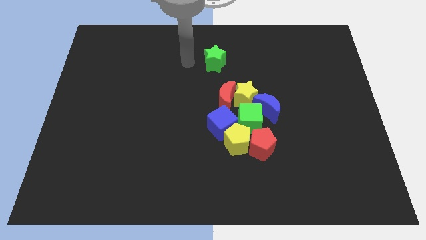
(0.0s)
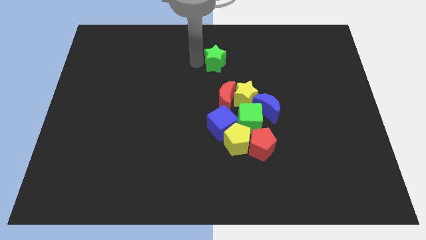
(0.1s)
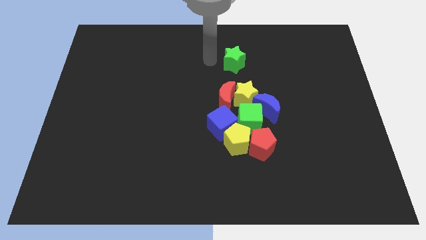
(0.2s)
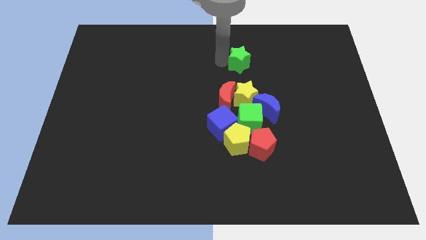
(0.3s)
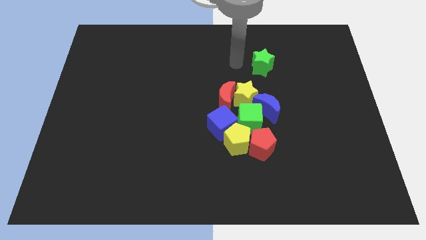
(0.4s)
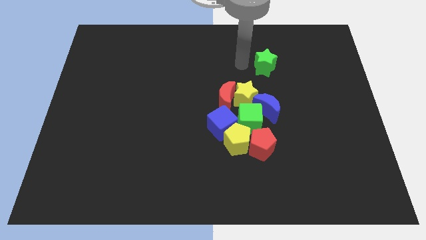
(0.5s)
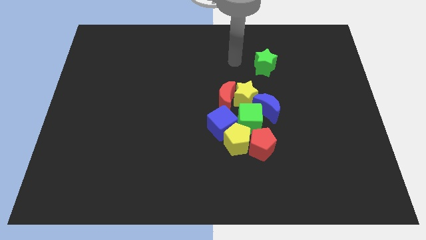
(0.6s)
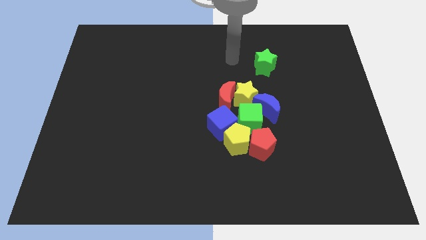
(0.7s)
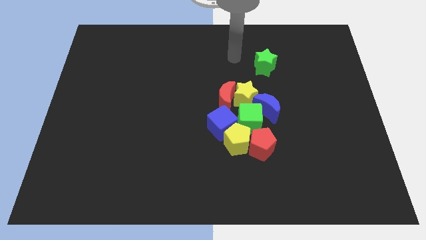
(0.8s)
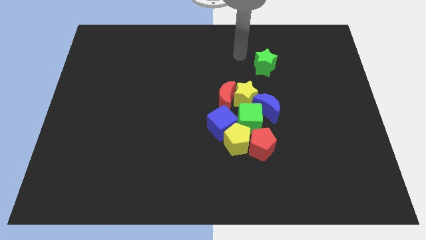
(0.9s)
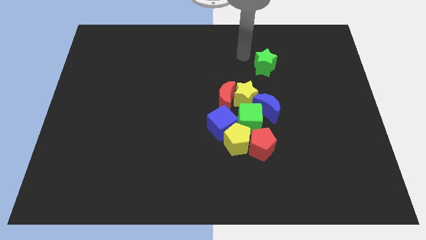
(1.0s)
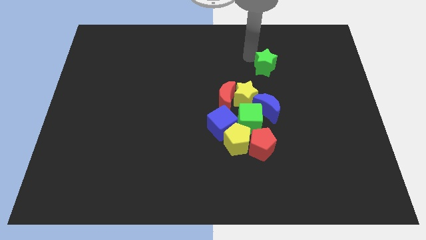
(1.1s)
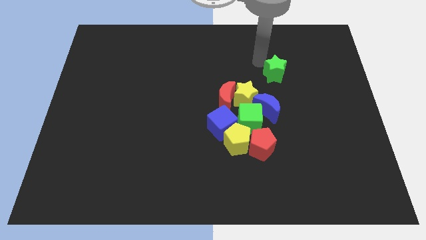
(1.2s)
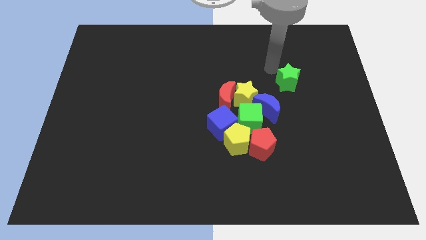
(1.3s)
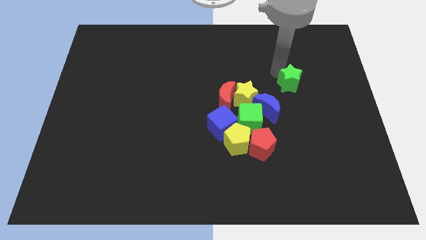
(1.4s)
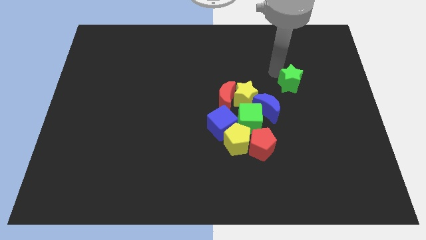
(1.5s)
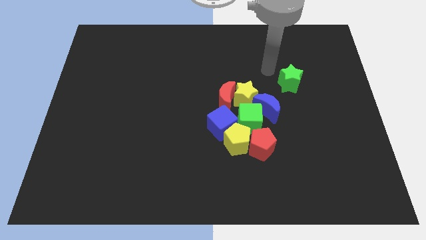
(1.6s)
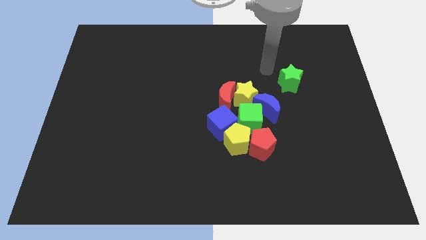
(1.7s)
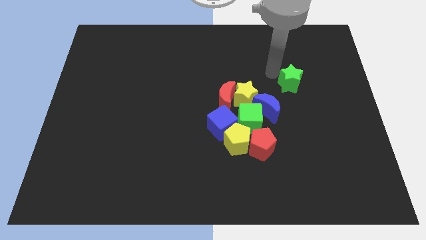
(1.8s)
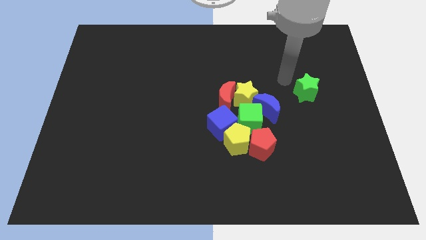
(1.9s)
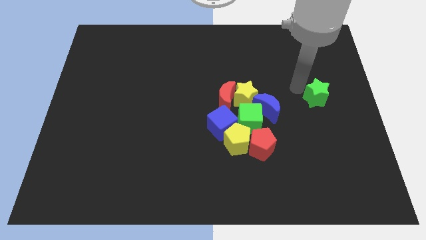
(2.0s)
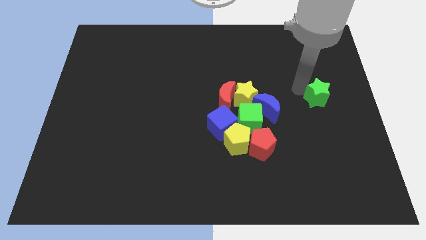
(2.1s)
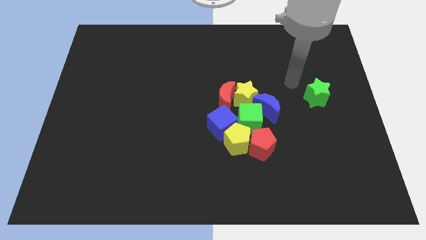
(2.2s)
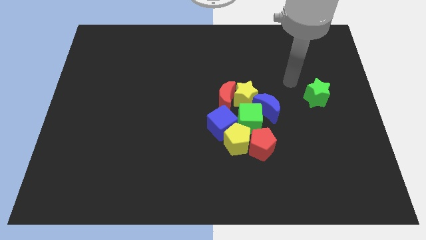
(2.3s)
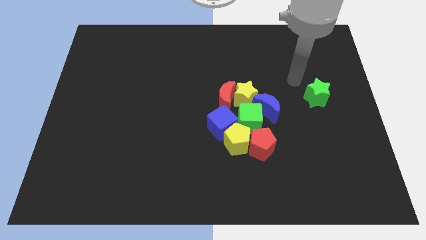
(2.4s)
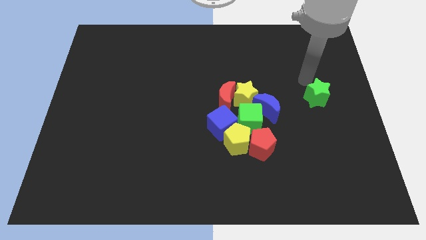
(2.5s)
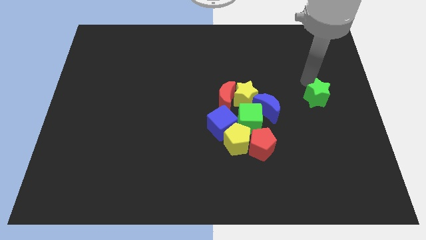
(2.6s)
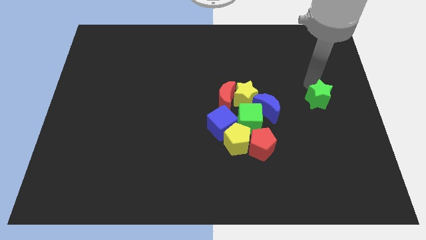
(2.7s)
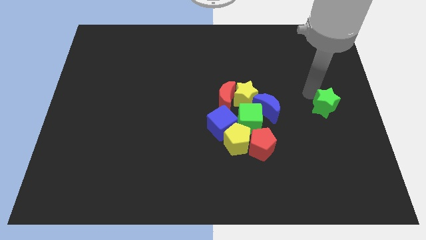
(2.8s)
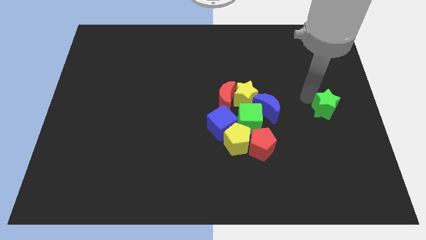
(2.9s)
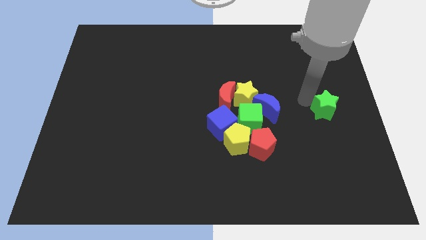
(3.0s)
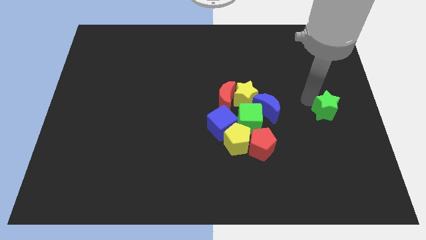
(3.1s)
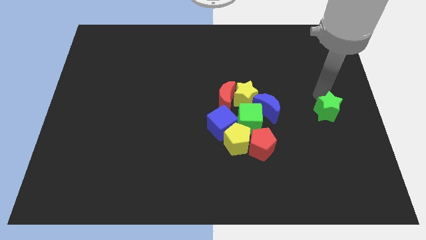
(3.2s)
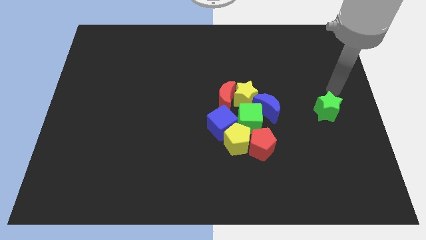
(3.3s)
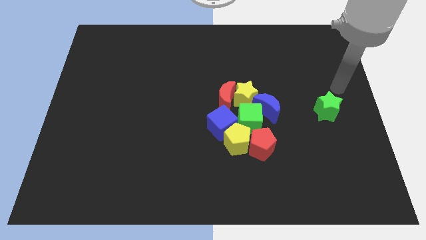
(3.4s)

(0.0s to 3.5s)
push the green star towards the center right

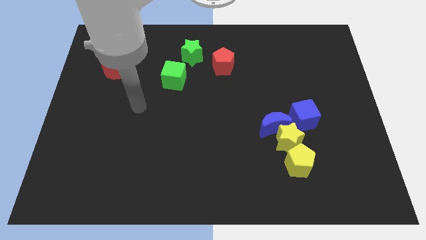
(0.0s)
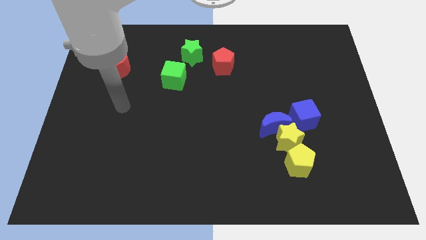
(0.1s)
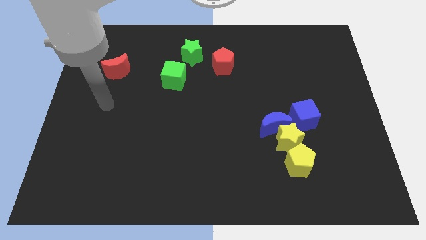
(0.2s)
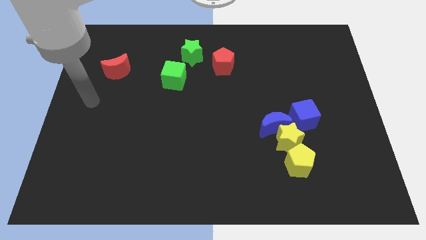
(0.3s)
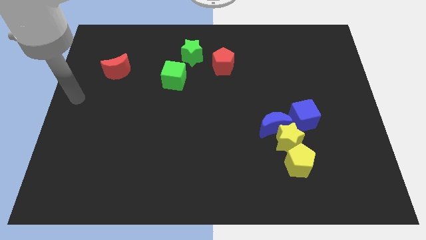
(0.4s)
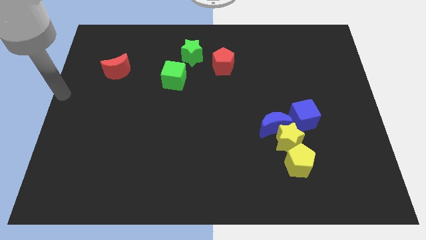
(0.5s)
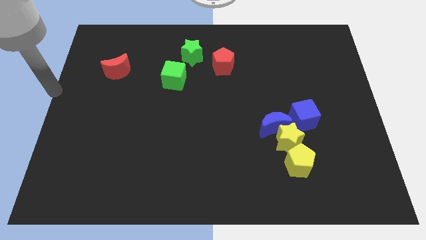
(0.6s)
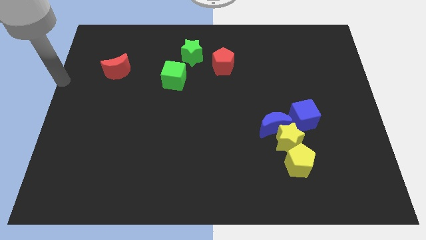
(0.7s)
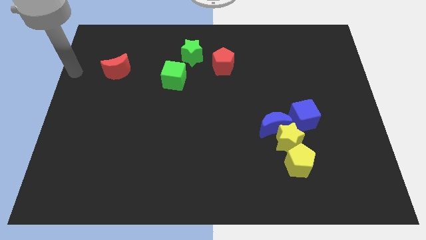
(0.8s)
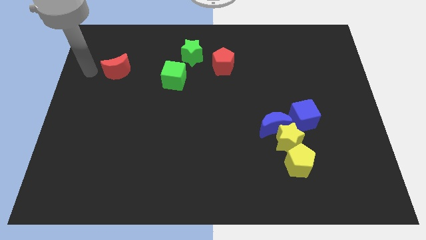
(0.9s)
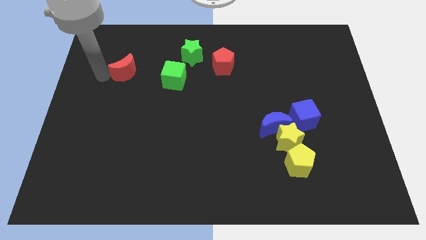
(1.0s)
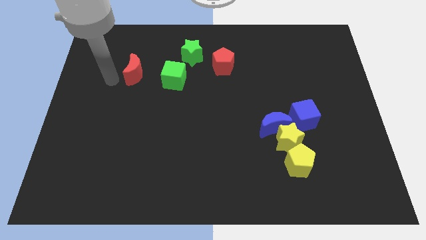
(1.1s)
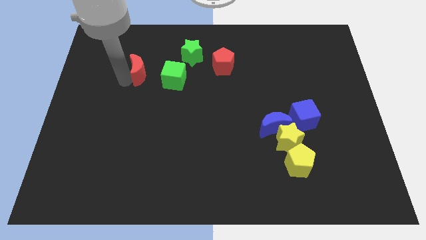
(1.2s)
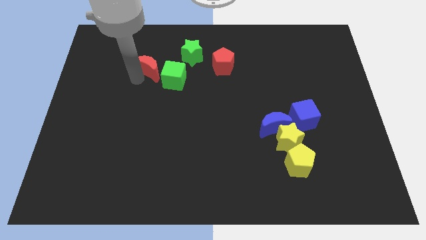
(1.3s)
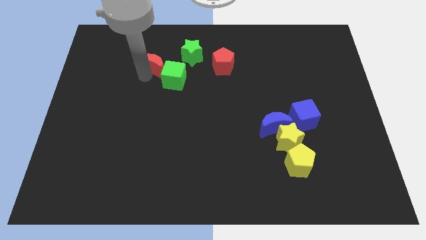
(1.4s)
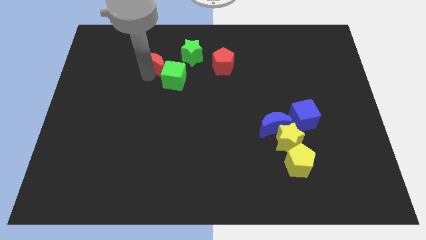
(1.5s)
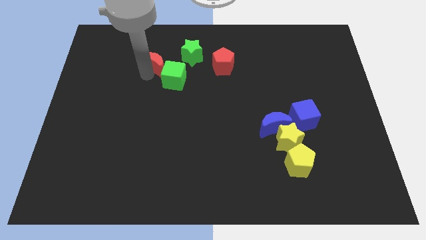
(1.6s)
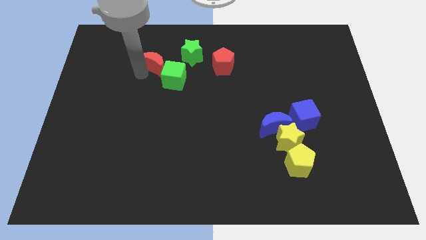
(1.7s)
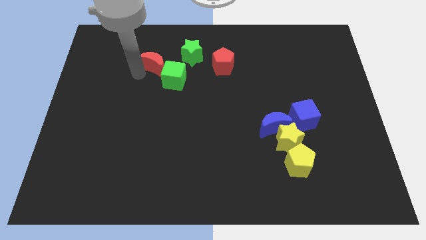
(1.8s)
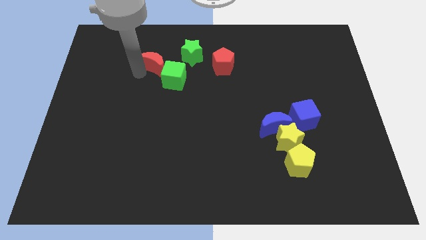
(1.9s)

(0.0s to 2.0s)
move the red moon into the green cube

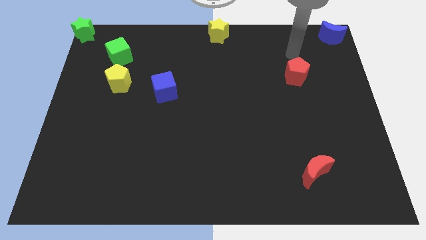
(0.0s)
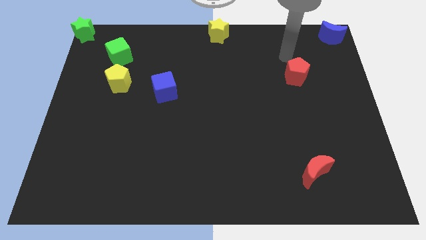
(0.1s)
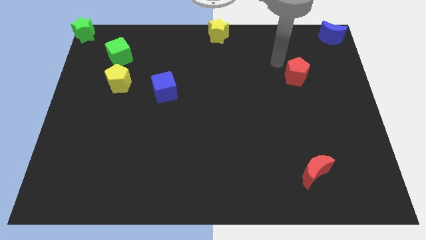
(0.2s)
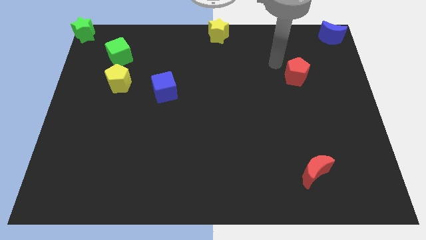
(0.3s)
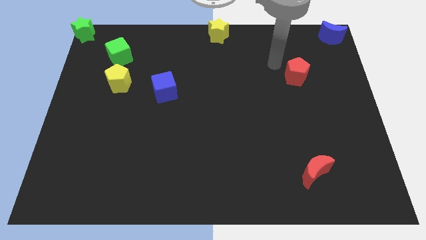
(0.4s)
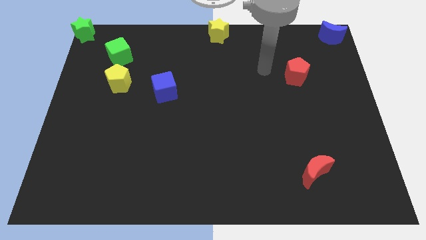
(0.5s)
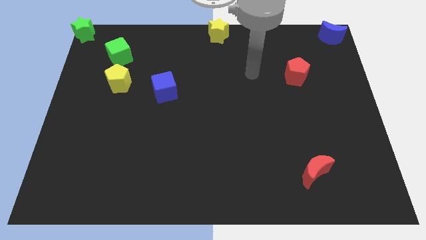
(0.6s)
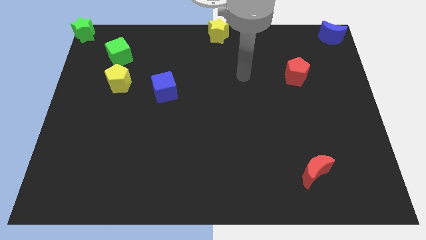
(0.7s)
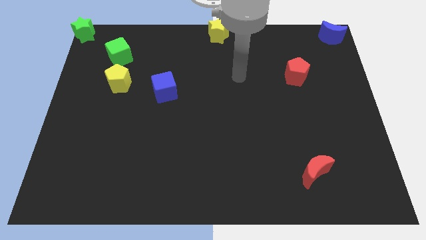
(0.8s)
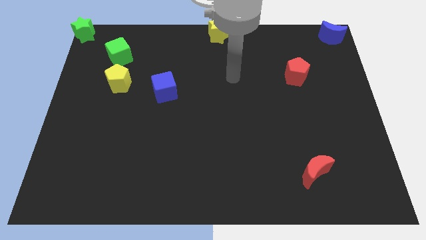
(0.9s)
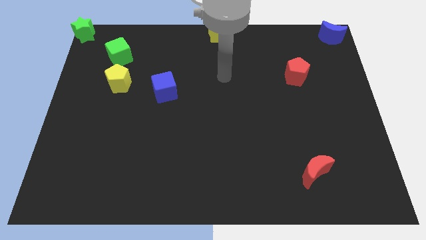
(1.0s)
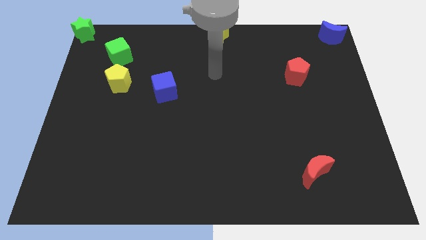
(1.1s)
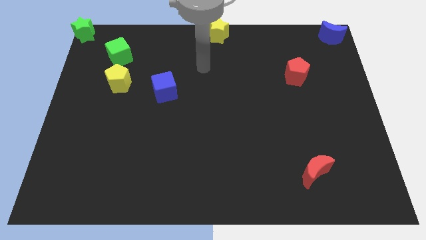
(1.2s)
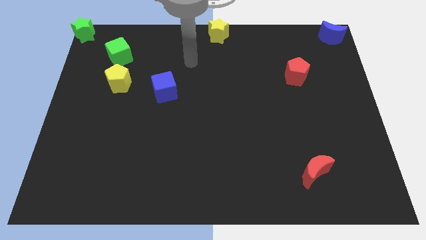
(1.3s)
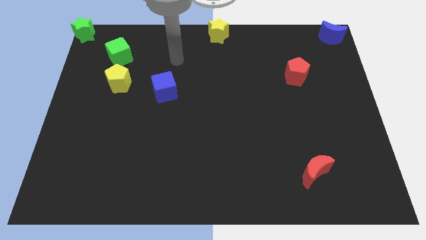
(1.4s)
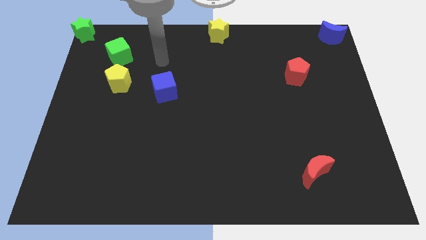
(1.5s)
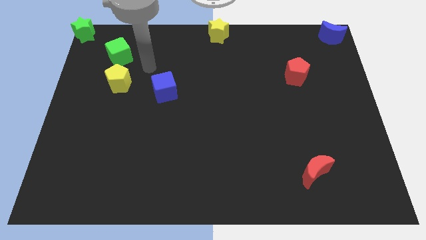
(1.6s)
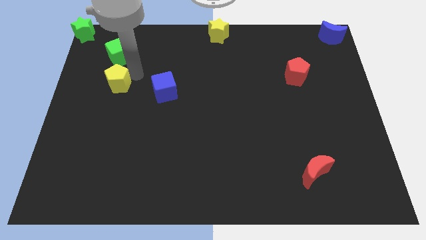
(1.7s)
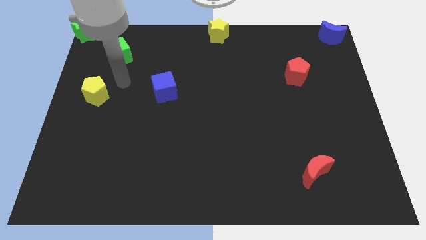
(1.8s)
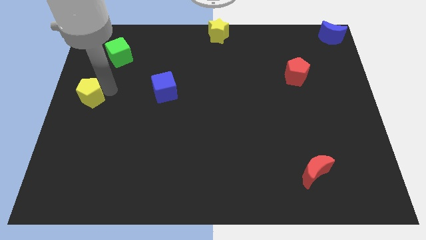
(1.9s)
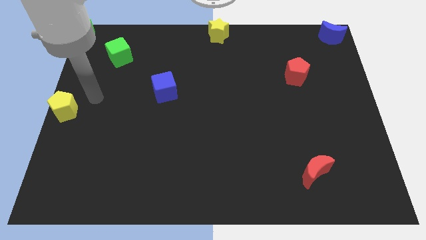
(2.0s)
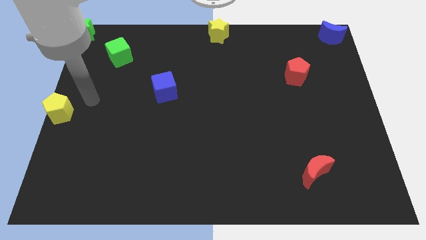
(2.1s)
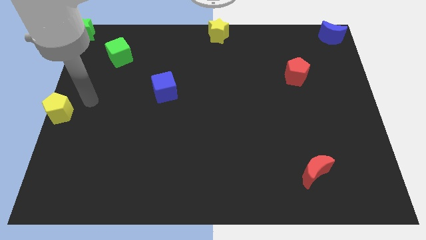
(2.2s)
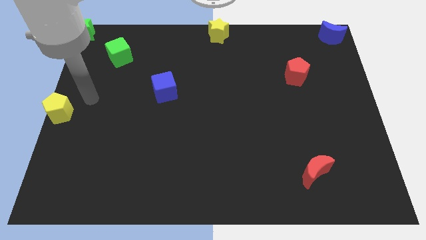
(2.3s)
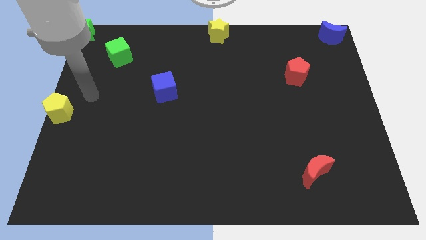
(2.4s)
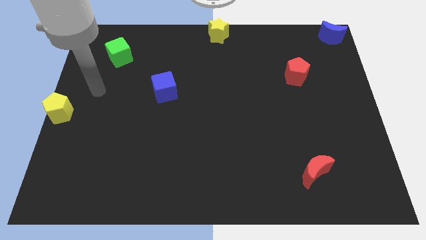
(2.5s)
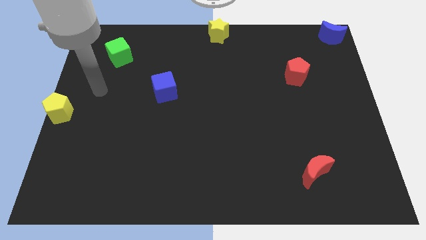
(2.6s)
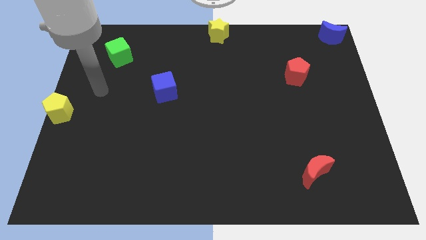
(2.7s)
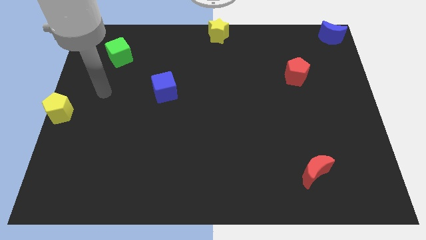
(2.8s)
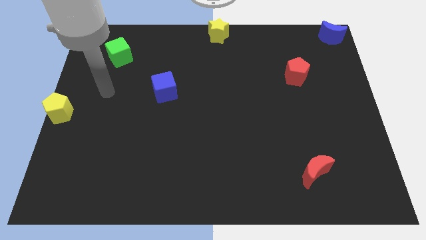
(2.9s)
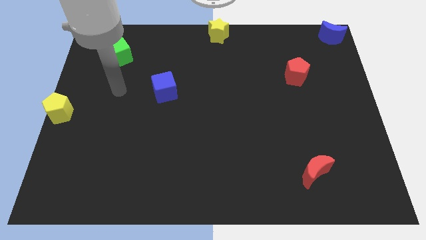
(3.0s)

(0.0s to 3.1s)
slide yellow pentagon to center left

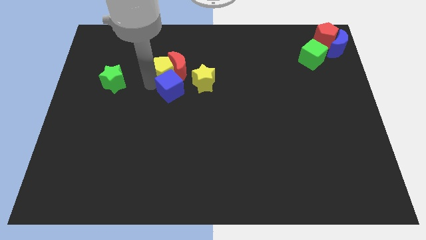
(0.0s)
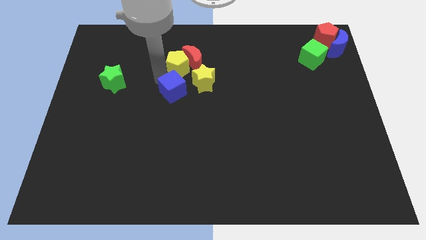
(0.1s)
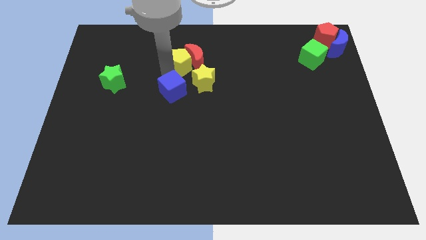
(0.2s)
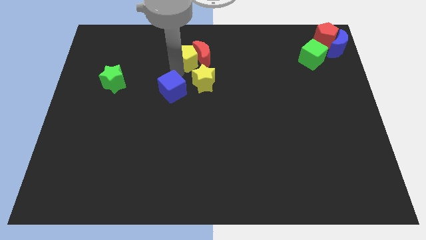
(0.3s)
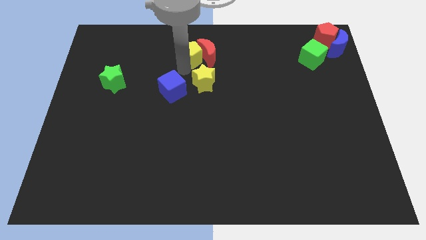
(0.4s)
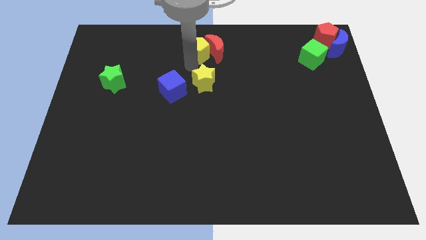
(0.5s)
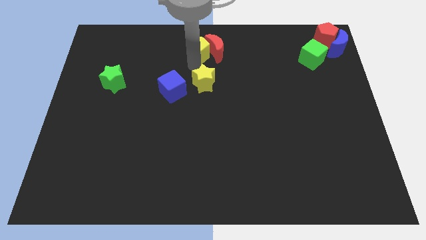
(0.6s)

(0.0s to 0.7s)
move the yellow and red block to the top centre of the board
